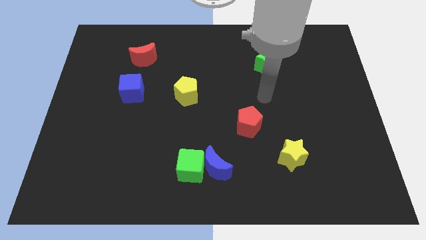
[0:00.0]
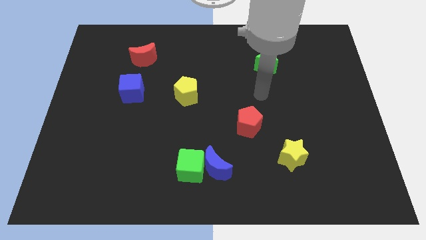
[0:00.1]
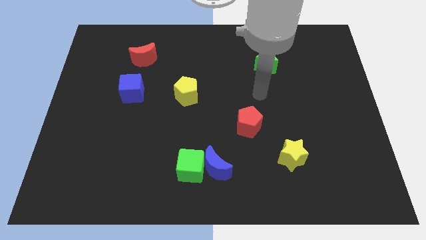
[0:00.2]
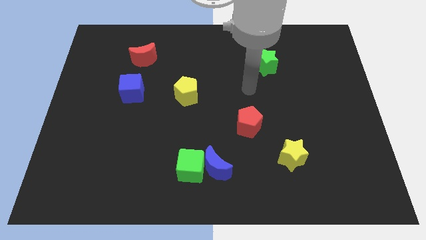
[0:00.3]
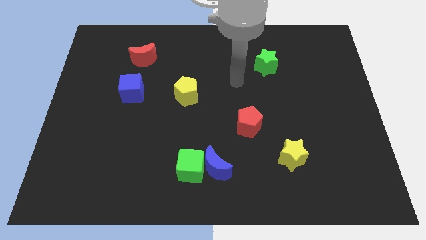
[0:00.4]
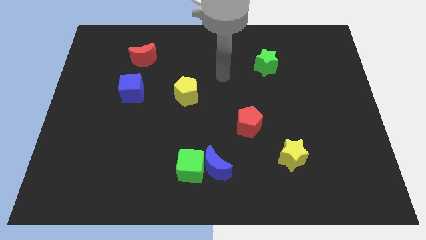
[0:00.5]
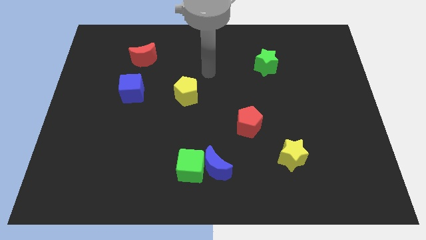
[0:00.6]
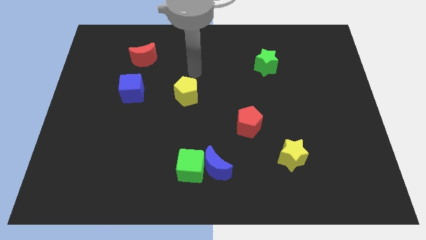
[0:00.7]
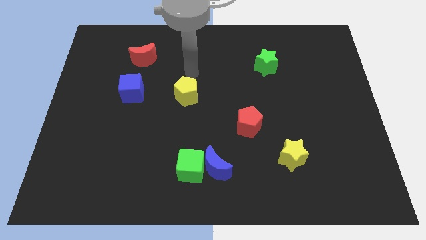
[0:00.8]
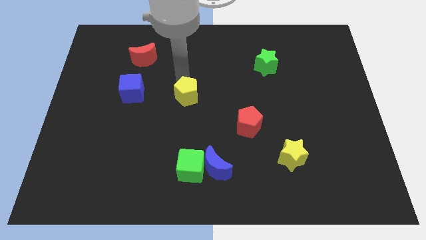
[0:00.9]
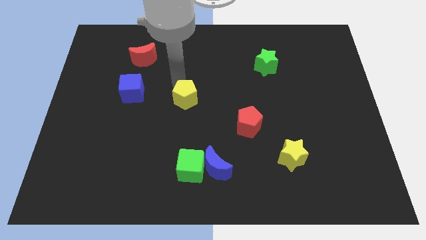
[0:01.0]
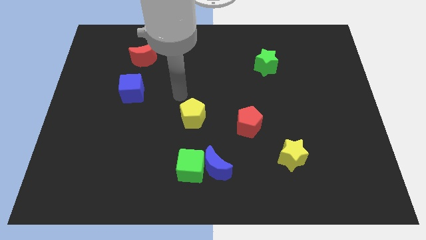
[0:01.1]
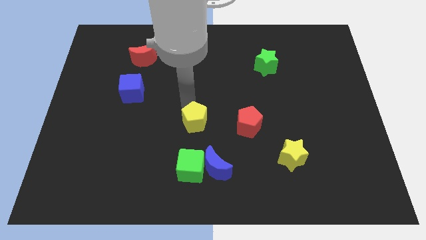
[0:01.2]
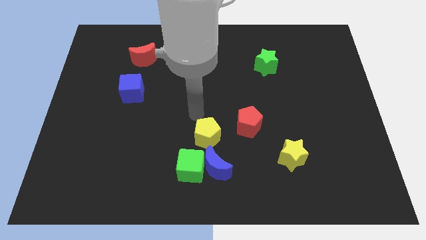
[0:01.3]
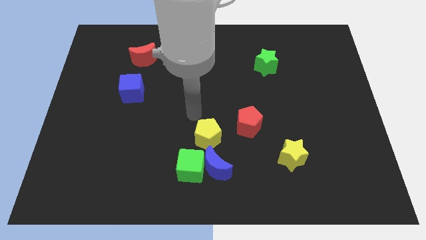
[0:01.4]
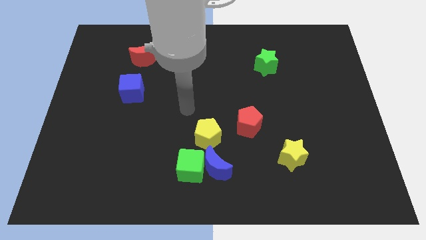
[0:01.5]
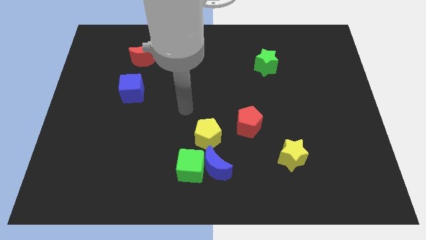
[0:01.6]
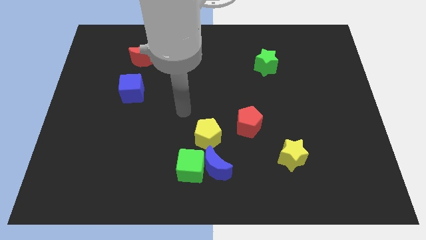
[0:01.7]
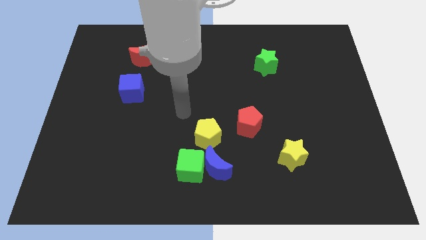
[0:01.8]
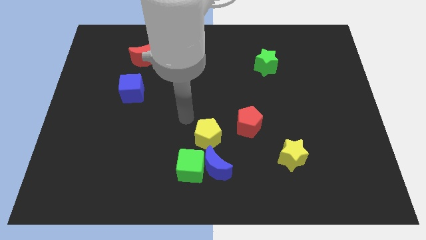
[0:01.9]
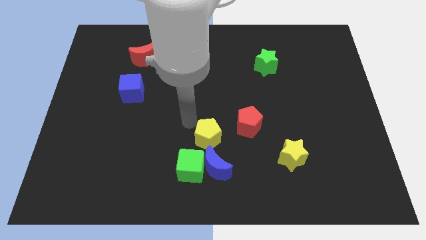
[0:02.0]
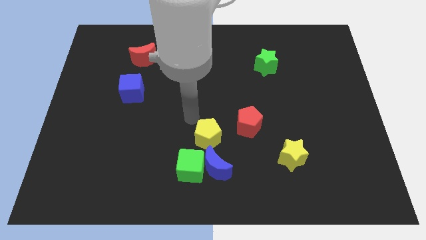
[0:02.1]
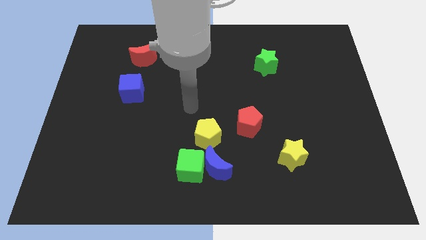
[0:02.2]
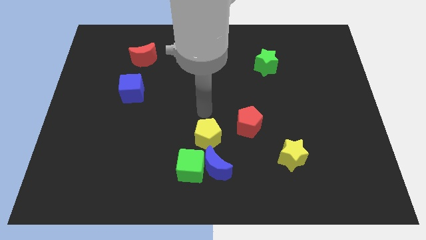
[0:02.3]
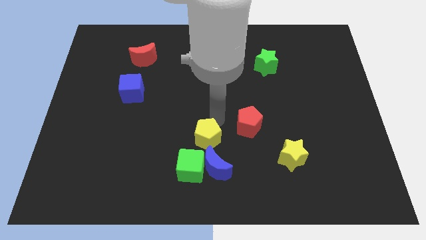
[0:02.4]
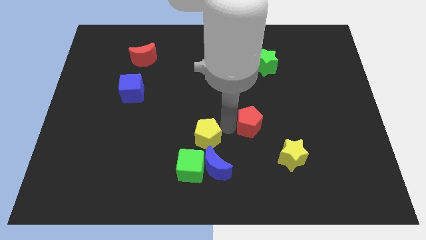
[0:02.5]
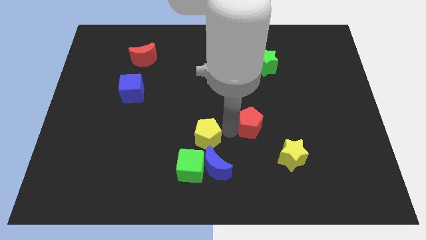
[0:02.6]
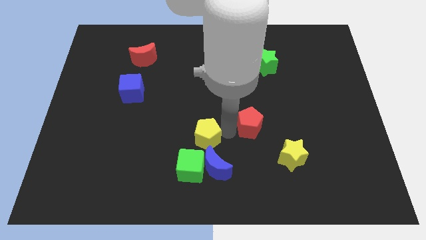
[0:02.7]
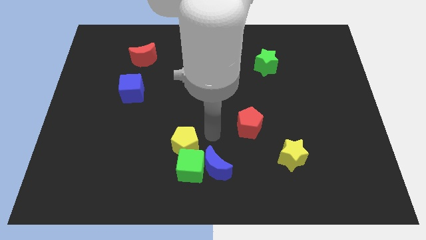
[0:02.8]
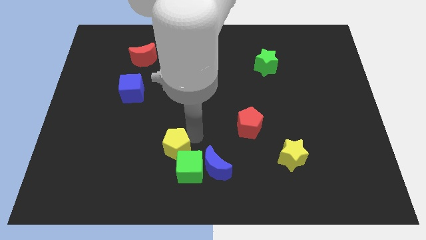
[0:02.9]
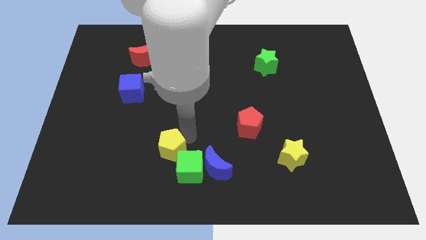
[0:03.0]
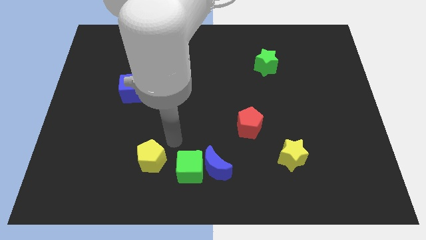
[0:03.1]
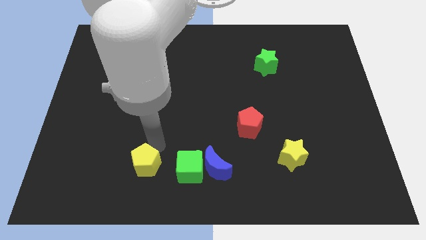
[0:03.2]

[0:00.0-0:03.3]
place the yellow pentagon at the left side of the green cube

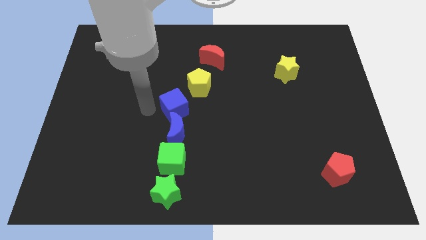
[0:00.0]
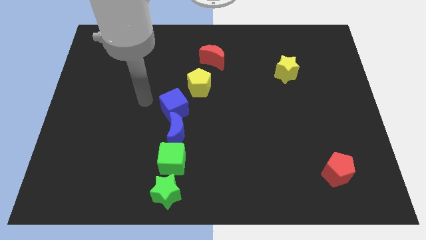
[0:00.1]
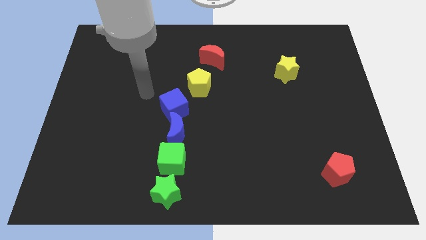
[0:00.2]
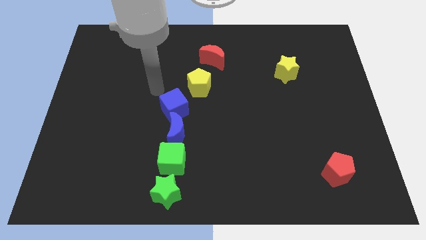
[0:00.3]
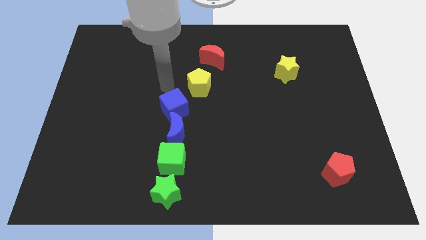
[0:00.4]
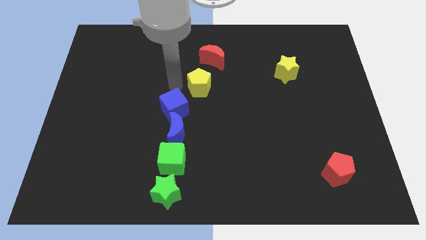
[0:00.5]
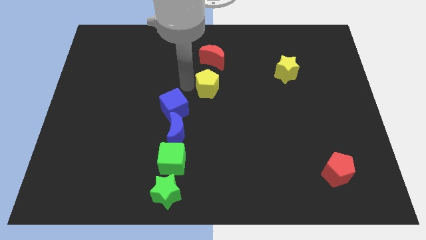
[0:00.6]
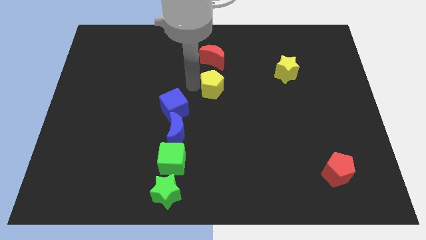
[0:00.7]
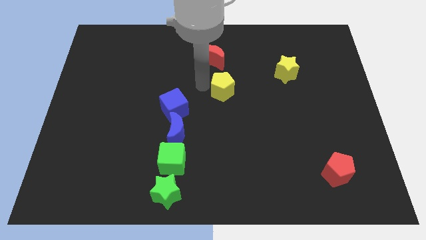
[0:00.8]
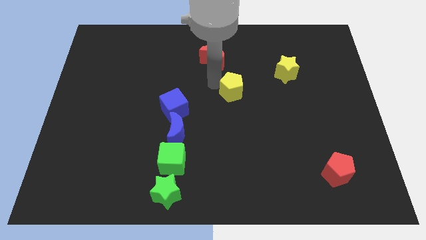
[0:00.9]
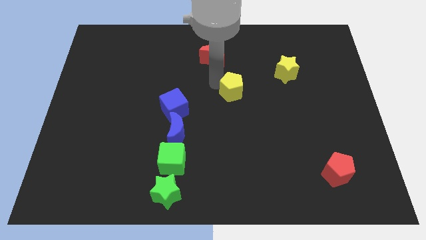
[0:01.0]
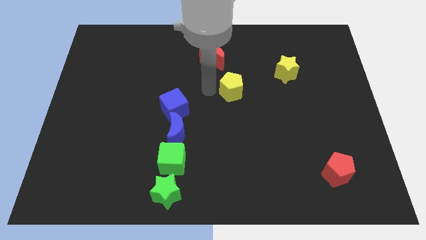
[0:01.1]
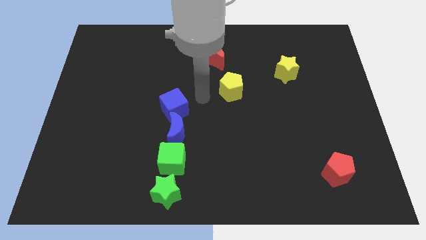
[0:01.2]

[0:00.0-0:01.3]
move the yellow pentagon to the right of the board

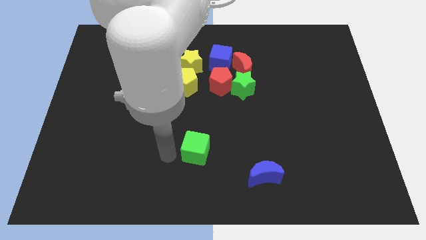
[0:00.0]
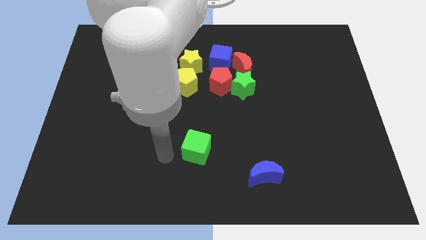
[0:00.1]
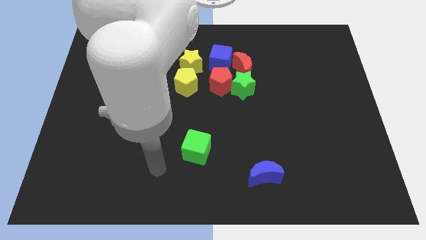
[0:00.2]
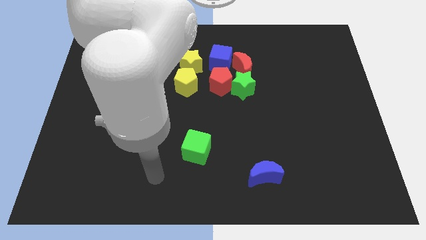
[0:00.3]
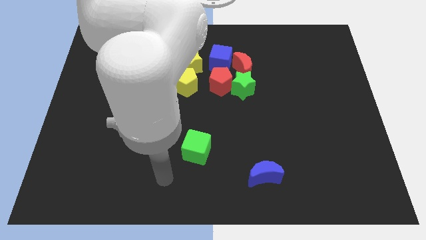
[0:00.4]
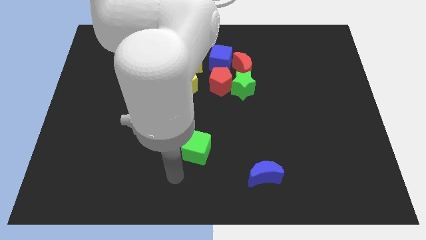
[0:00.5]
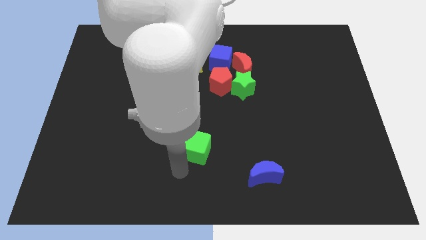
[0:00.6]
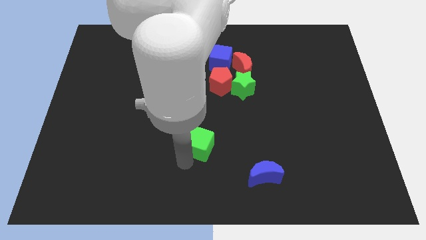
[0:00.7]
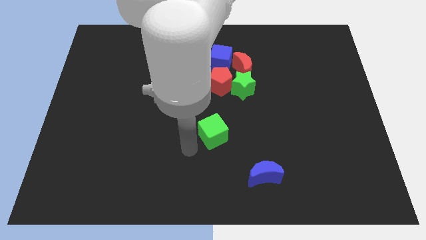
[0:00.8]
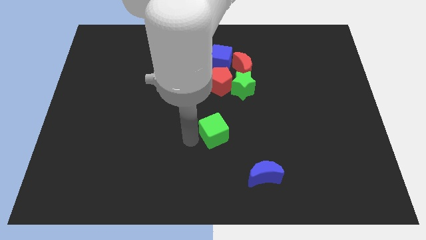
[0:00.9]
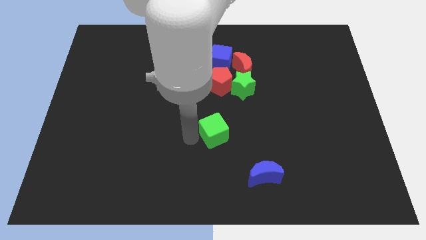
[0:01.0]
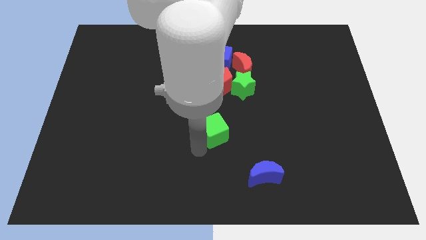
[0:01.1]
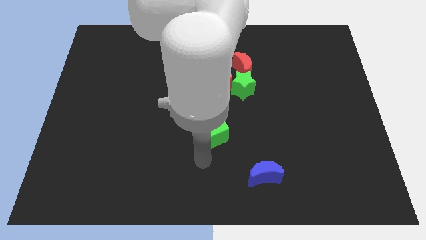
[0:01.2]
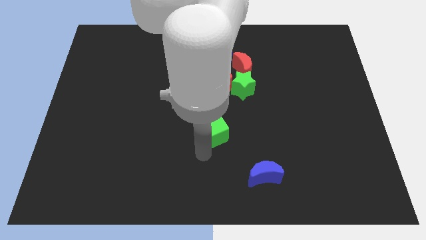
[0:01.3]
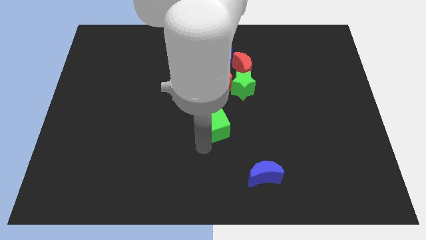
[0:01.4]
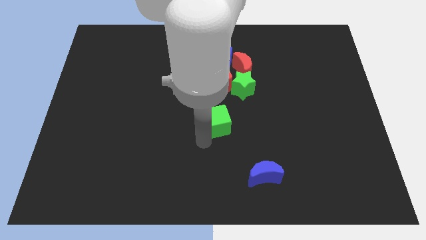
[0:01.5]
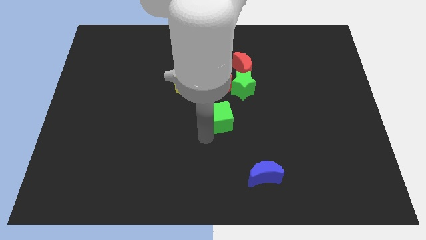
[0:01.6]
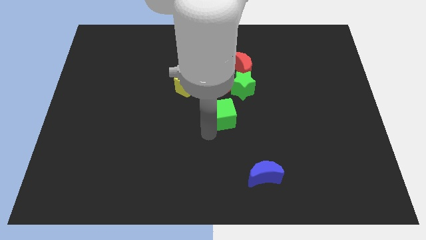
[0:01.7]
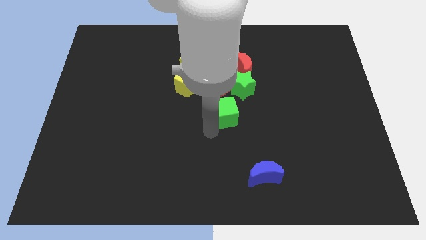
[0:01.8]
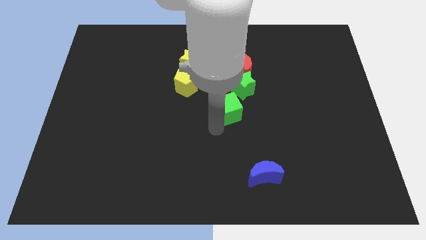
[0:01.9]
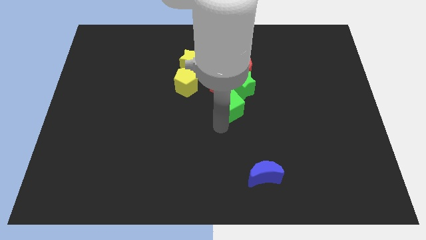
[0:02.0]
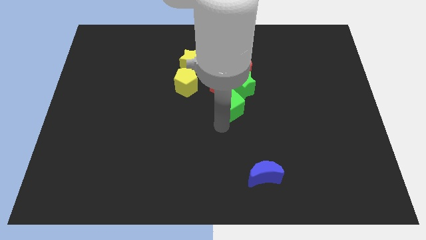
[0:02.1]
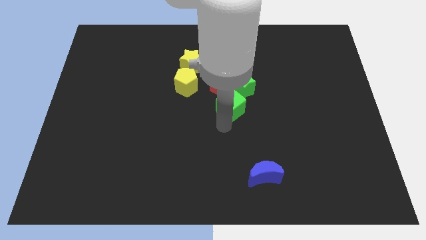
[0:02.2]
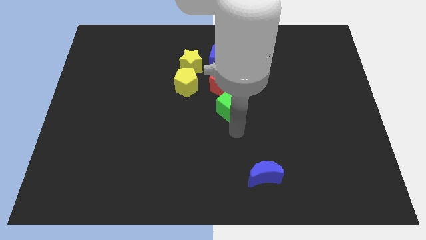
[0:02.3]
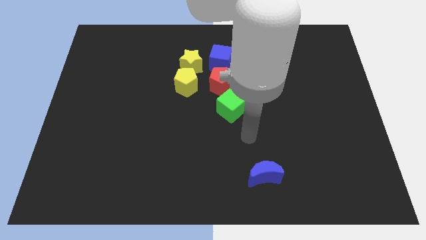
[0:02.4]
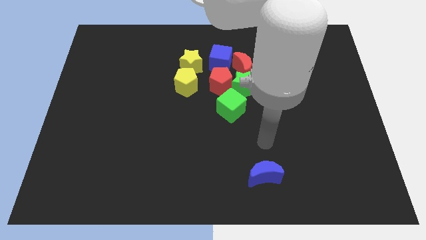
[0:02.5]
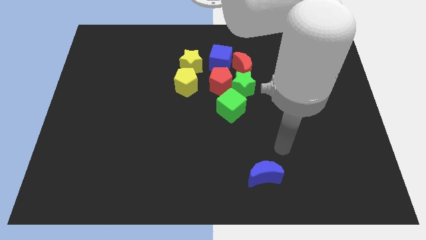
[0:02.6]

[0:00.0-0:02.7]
push green cube into the group of blocks

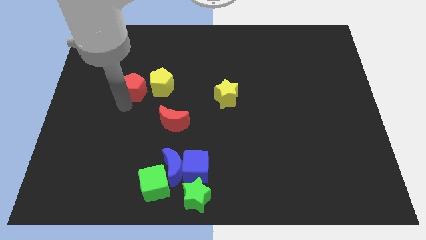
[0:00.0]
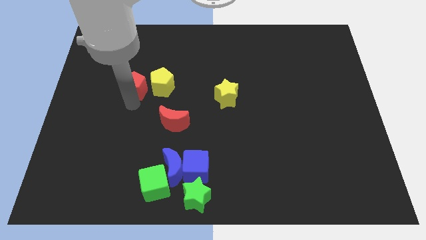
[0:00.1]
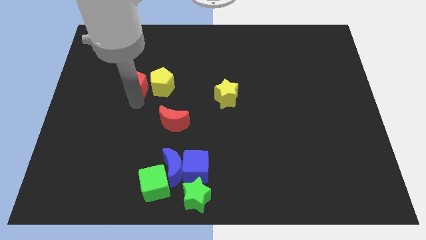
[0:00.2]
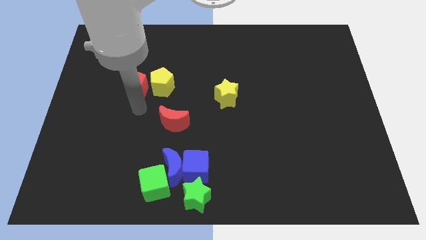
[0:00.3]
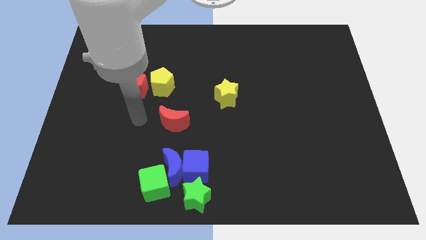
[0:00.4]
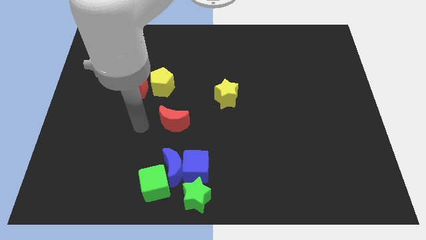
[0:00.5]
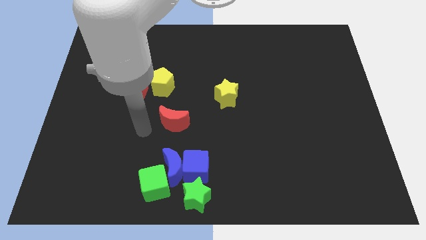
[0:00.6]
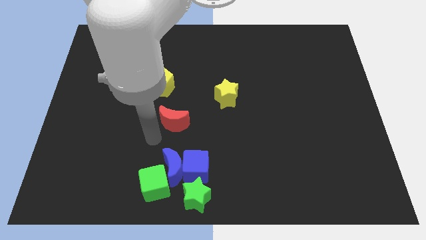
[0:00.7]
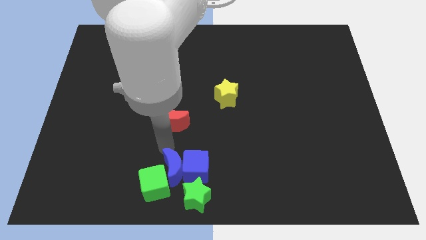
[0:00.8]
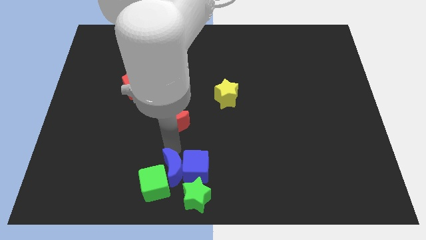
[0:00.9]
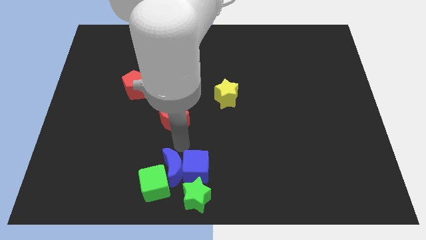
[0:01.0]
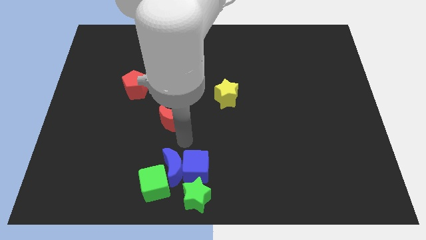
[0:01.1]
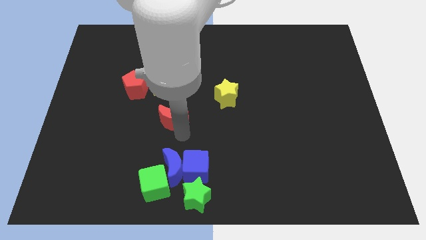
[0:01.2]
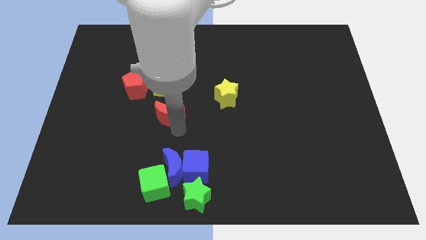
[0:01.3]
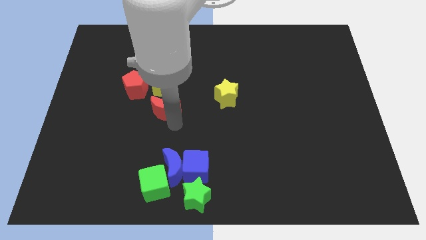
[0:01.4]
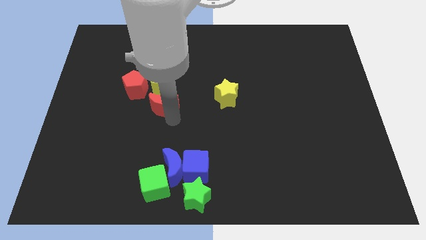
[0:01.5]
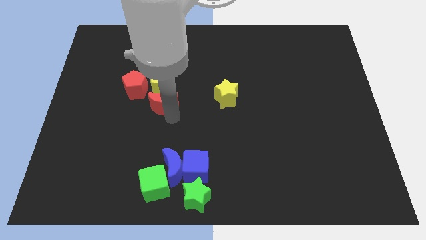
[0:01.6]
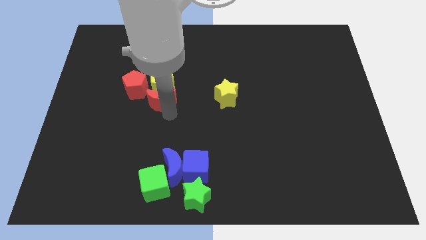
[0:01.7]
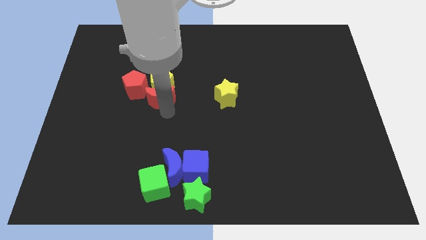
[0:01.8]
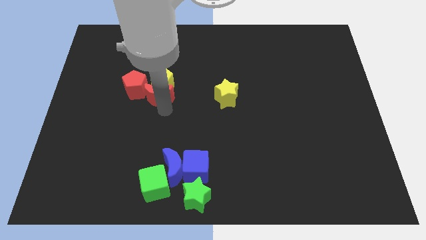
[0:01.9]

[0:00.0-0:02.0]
push the red moon upwards slightly
